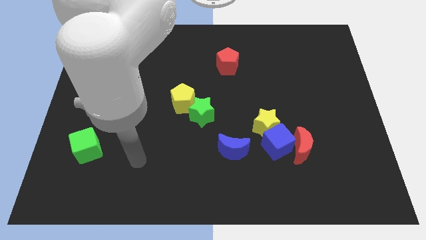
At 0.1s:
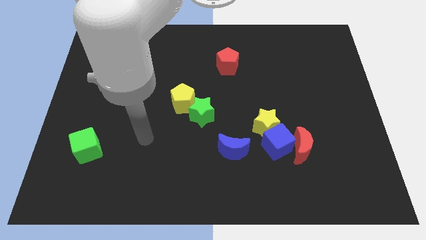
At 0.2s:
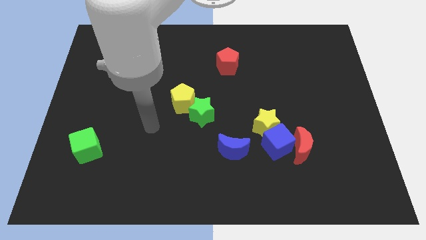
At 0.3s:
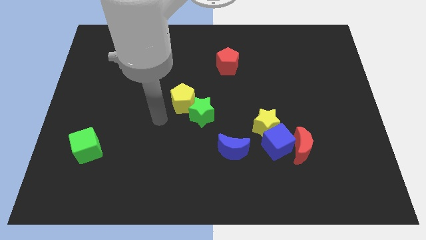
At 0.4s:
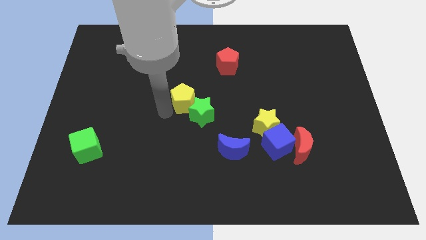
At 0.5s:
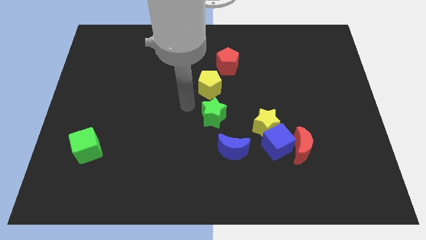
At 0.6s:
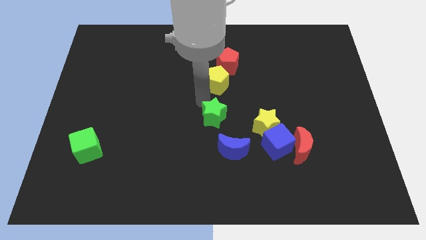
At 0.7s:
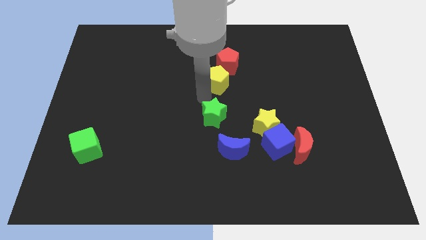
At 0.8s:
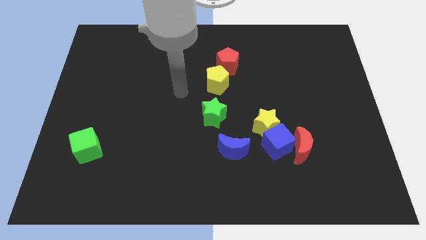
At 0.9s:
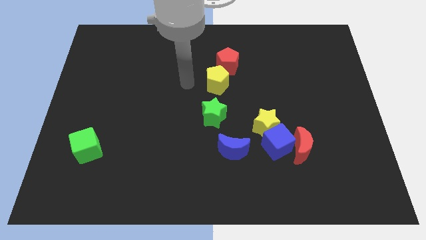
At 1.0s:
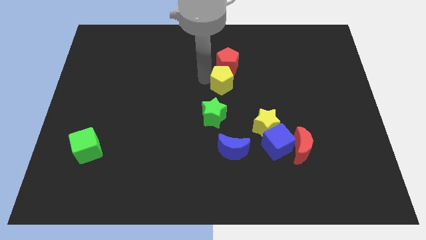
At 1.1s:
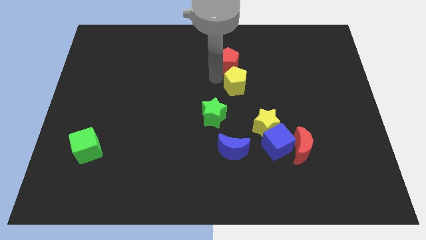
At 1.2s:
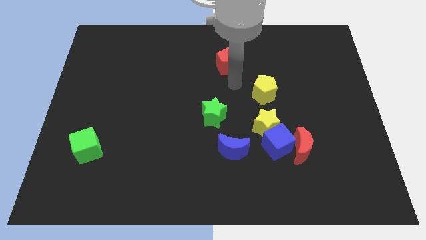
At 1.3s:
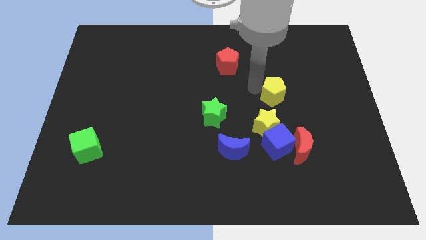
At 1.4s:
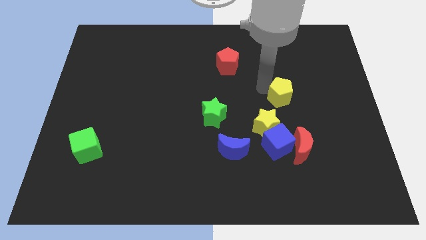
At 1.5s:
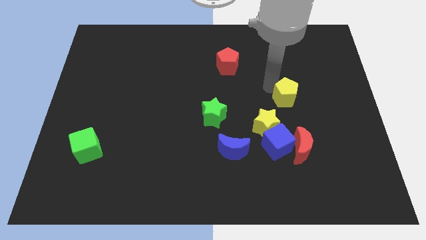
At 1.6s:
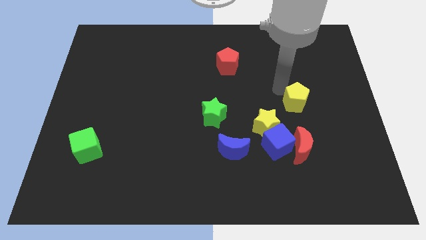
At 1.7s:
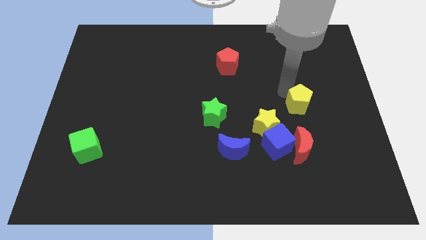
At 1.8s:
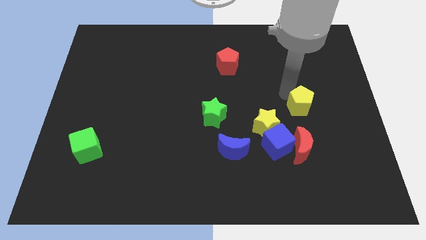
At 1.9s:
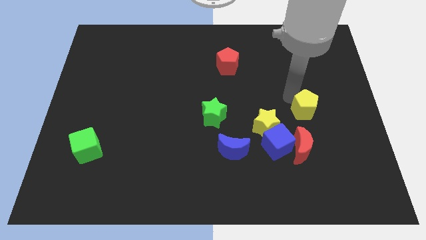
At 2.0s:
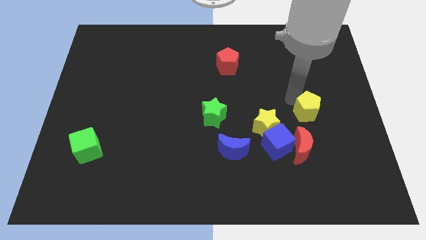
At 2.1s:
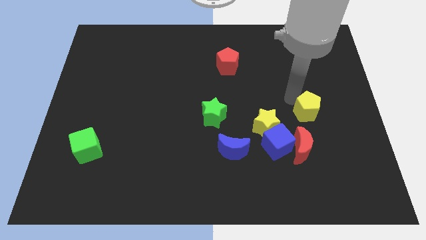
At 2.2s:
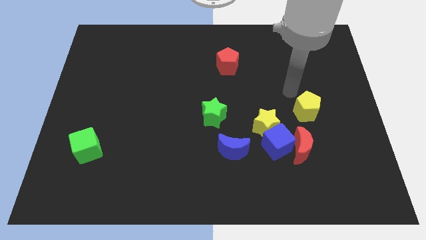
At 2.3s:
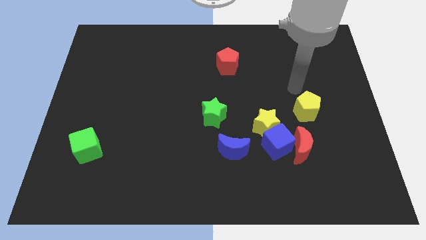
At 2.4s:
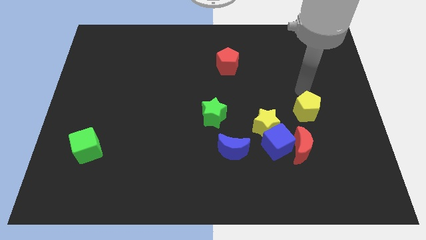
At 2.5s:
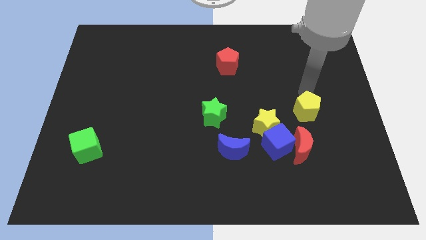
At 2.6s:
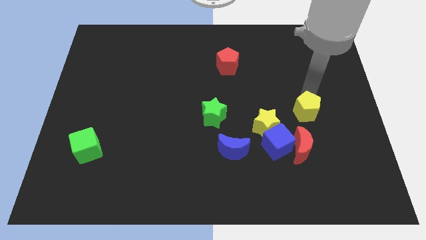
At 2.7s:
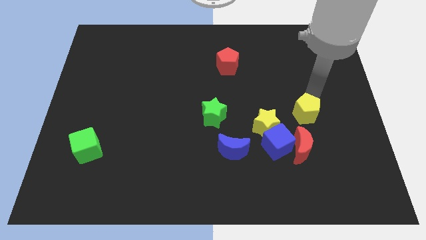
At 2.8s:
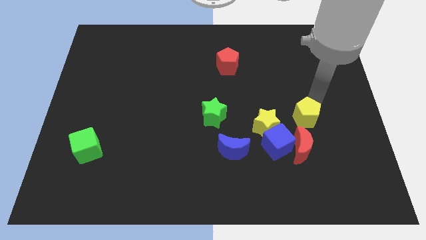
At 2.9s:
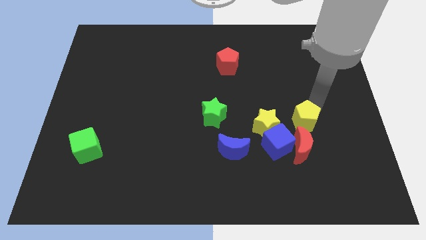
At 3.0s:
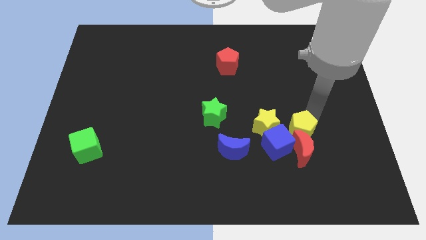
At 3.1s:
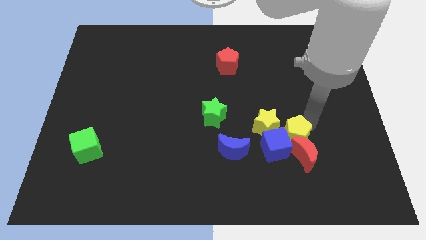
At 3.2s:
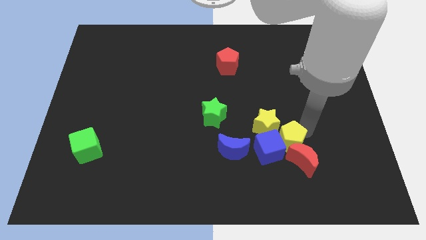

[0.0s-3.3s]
move the yellow pentagon to the red moon

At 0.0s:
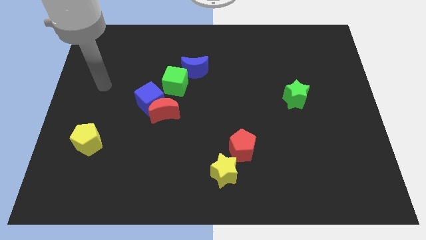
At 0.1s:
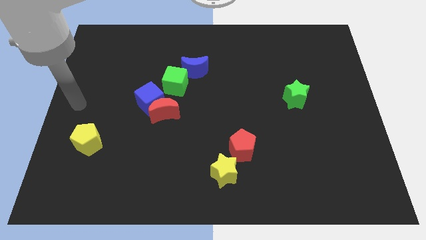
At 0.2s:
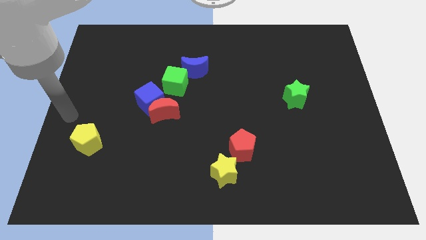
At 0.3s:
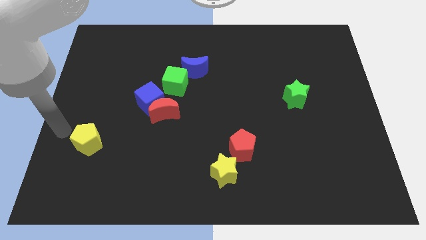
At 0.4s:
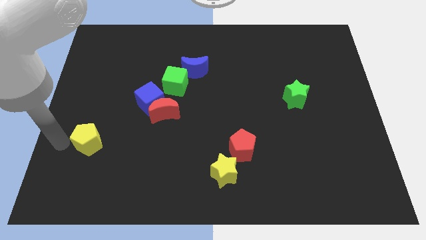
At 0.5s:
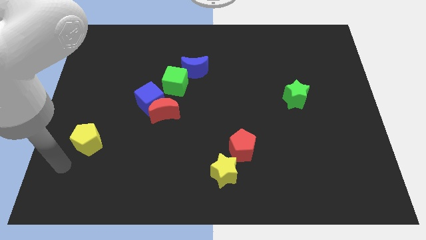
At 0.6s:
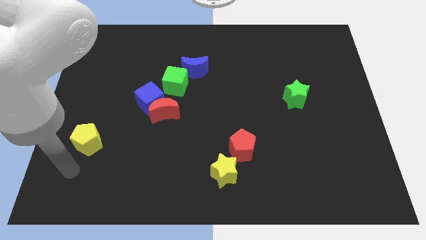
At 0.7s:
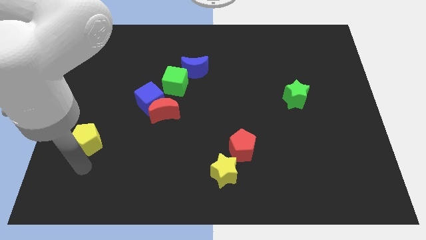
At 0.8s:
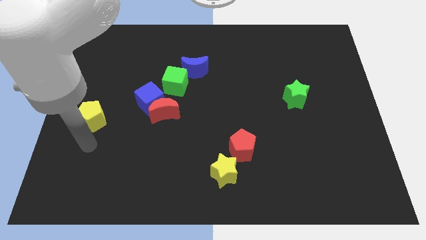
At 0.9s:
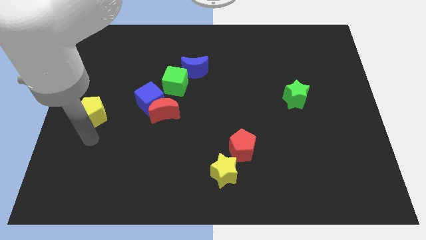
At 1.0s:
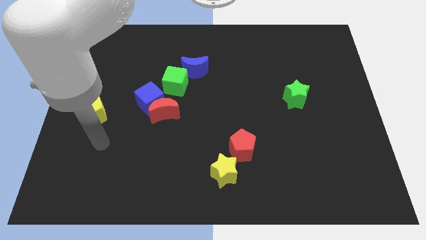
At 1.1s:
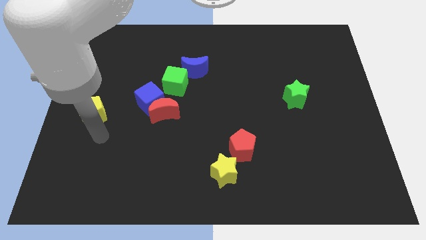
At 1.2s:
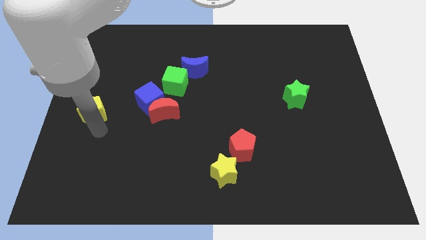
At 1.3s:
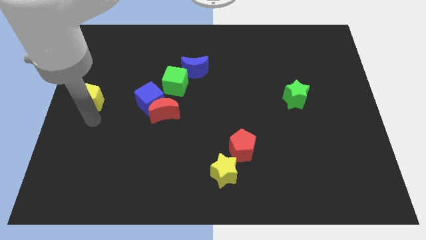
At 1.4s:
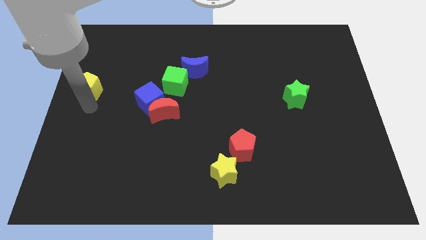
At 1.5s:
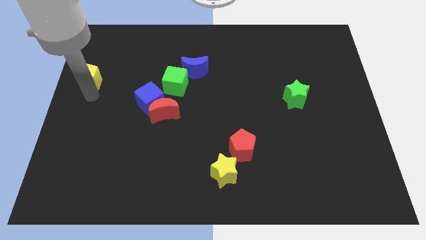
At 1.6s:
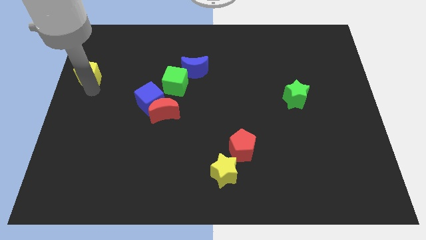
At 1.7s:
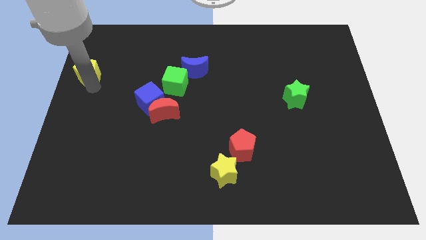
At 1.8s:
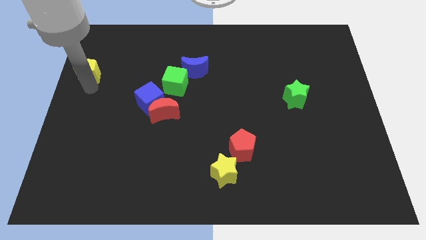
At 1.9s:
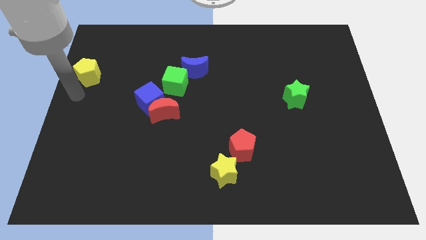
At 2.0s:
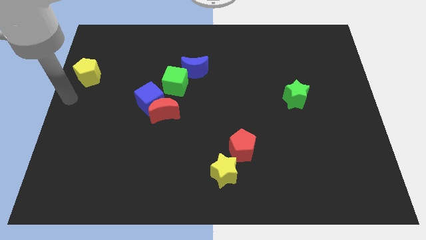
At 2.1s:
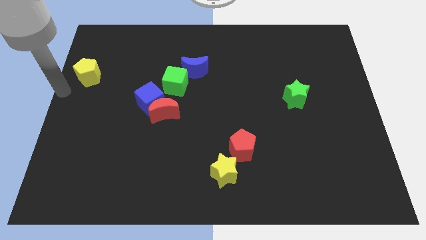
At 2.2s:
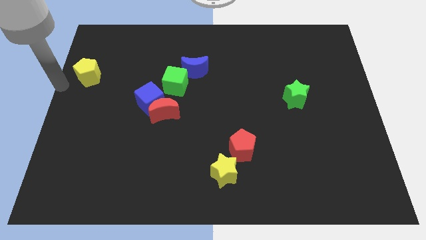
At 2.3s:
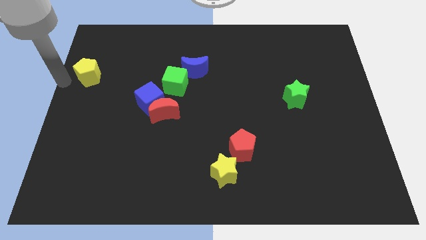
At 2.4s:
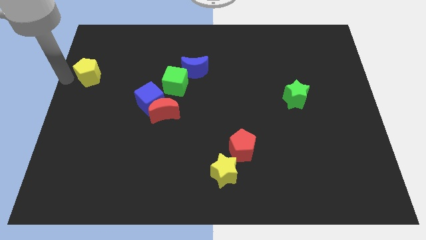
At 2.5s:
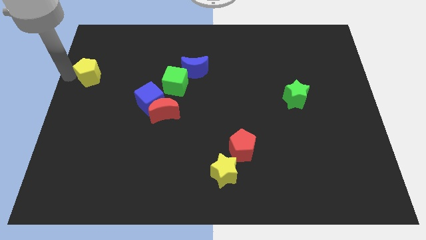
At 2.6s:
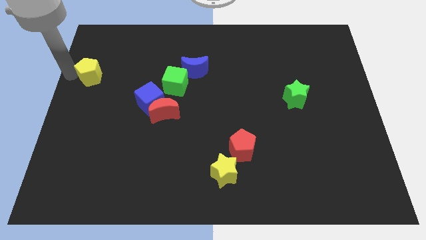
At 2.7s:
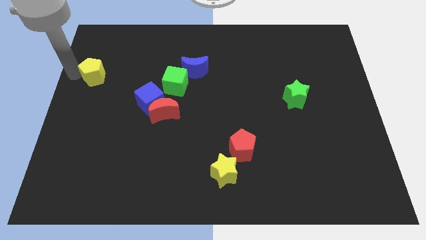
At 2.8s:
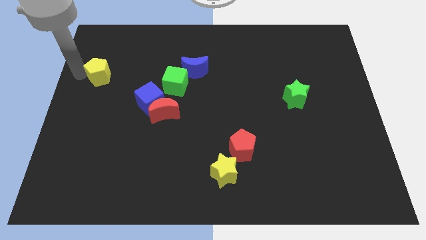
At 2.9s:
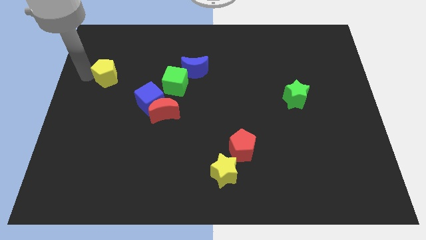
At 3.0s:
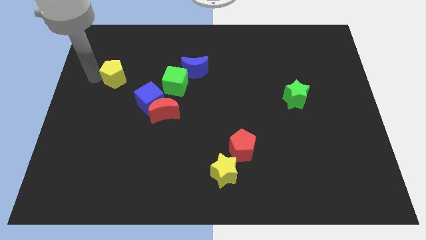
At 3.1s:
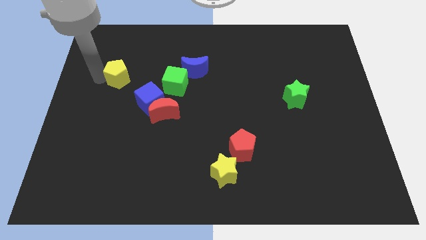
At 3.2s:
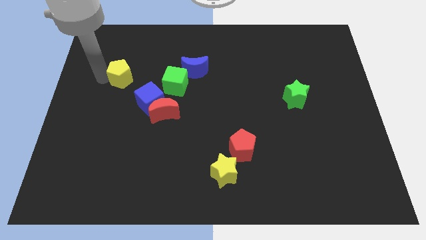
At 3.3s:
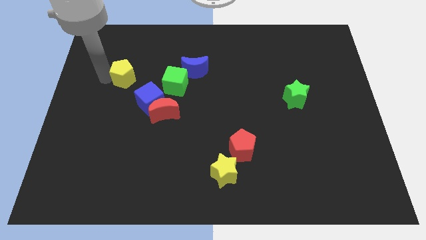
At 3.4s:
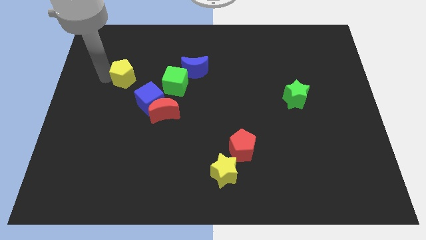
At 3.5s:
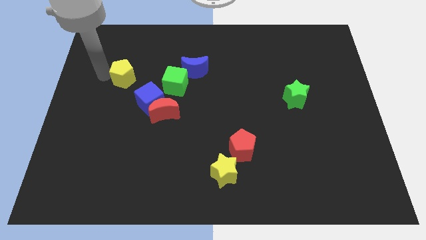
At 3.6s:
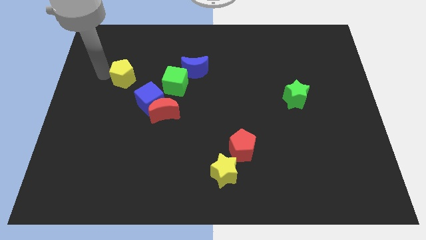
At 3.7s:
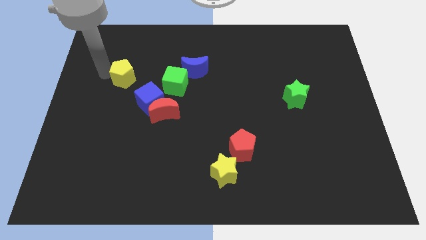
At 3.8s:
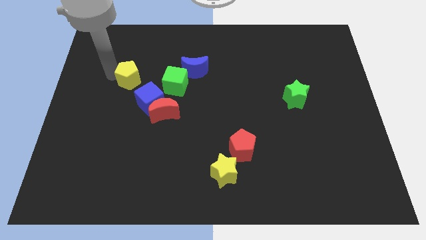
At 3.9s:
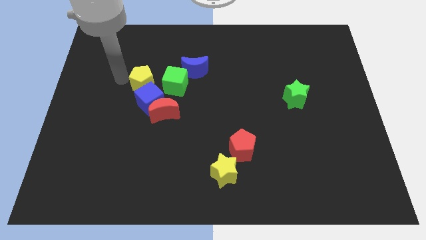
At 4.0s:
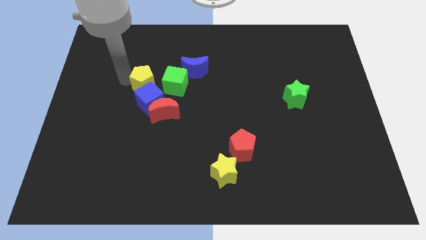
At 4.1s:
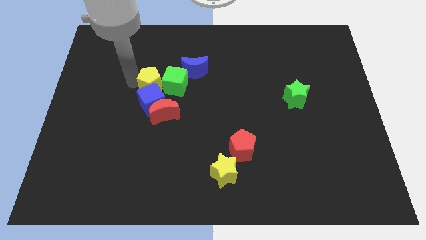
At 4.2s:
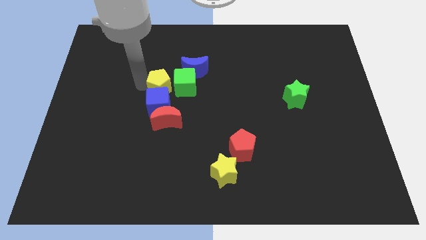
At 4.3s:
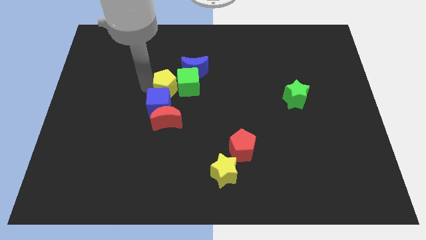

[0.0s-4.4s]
slide the yellow pentagon close to the green cube

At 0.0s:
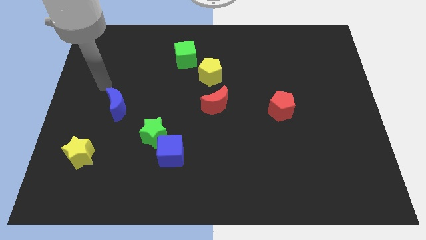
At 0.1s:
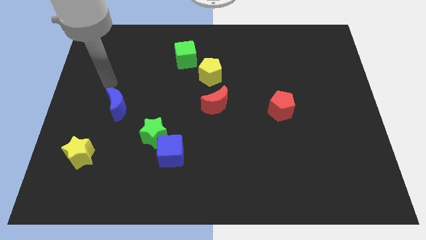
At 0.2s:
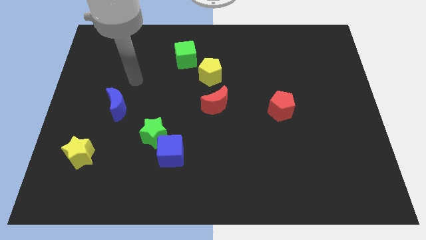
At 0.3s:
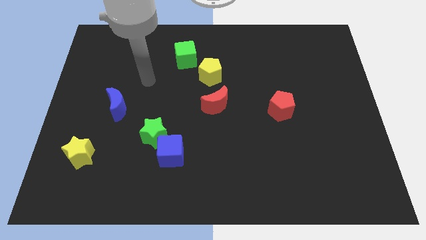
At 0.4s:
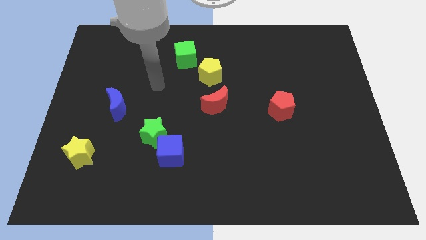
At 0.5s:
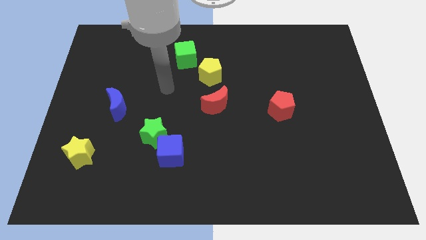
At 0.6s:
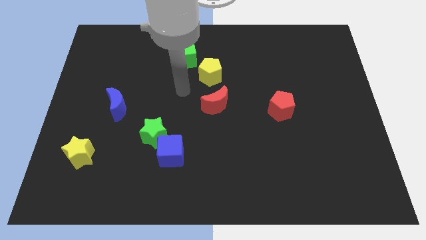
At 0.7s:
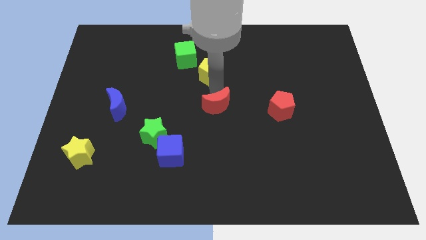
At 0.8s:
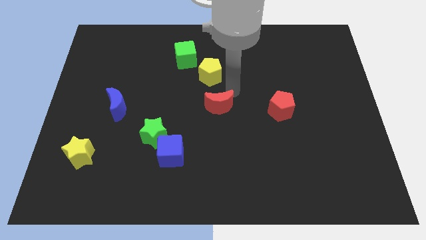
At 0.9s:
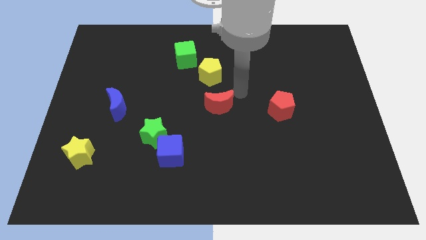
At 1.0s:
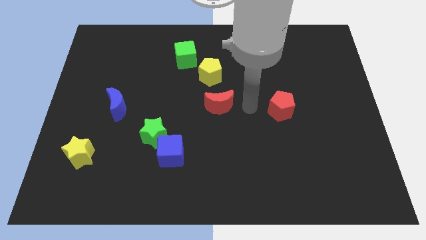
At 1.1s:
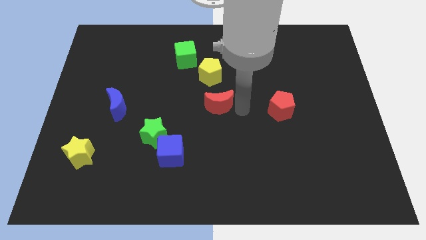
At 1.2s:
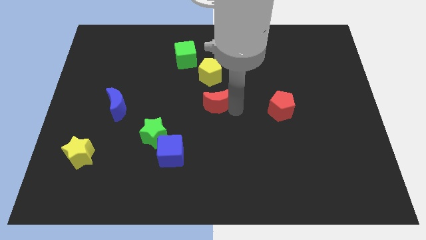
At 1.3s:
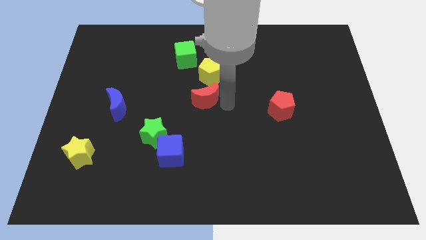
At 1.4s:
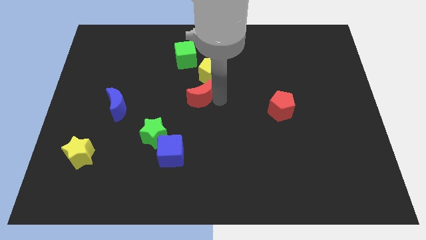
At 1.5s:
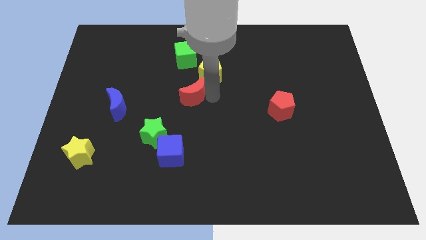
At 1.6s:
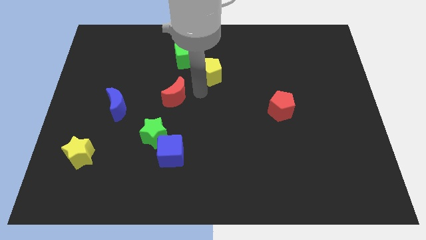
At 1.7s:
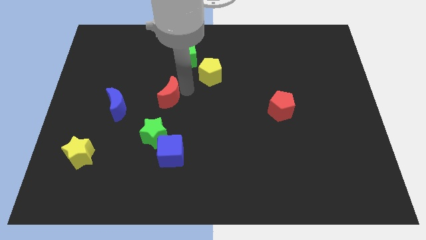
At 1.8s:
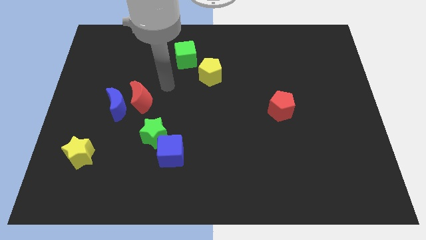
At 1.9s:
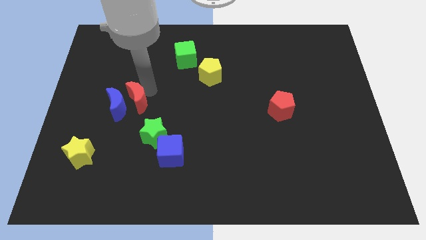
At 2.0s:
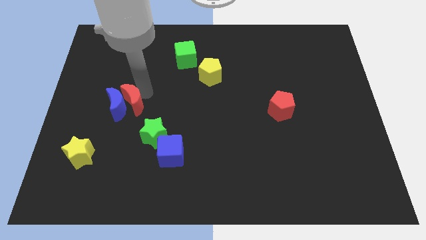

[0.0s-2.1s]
slide the red moon to the blue moon
